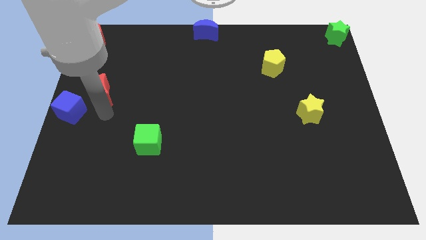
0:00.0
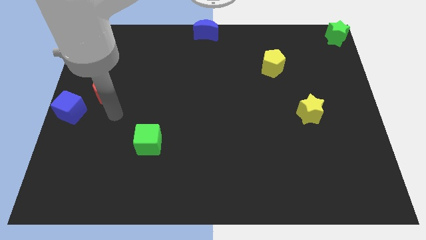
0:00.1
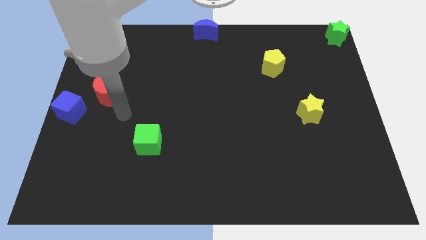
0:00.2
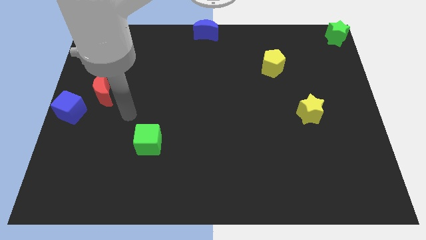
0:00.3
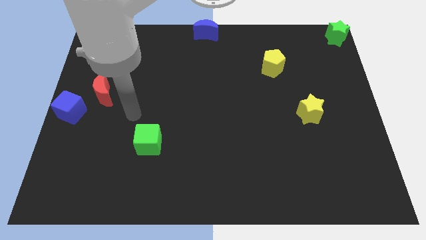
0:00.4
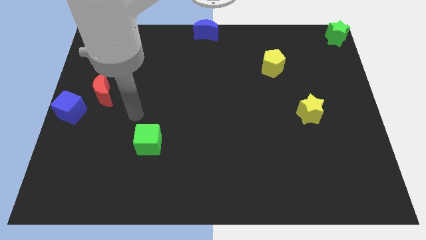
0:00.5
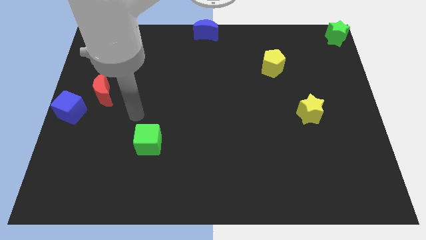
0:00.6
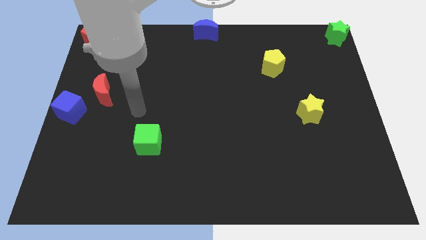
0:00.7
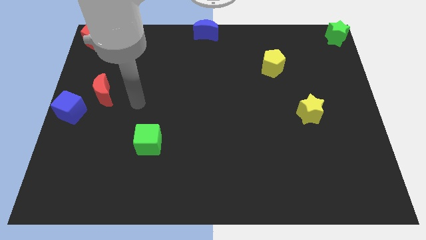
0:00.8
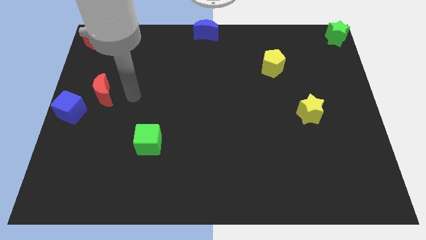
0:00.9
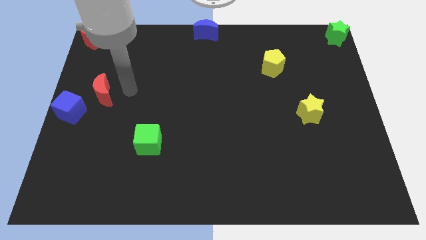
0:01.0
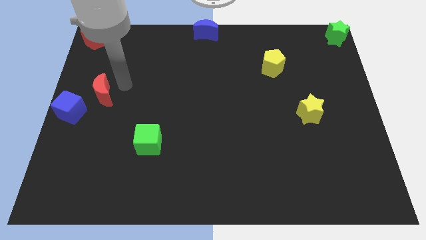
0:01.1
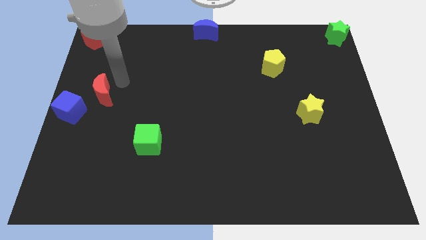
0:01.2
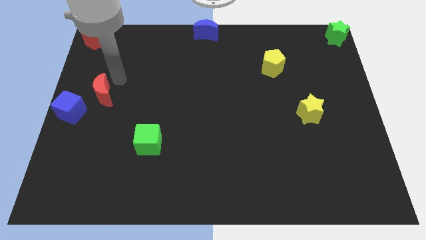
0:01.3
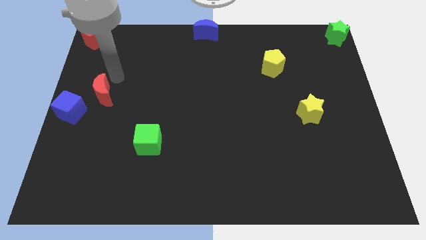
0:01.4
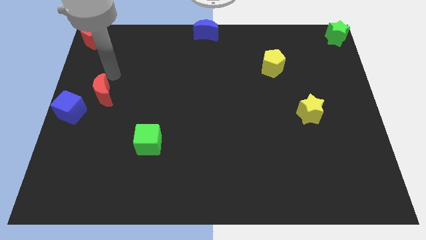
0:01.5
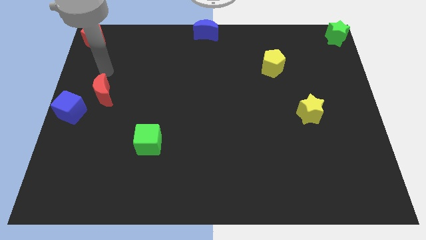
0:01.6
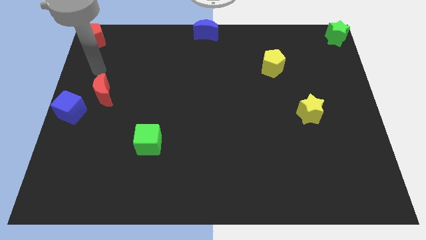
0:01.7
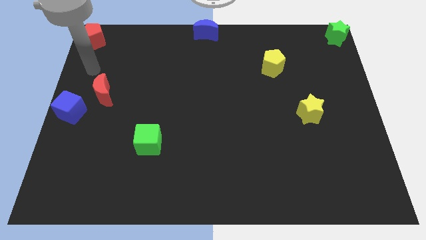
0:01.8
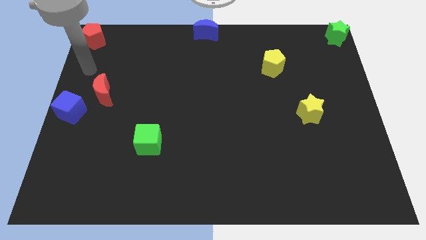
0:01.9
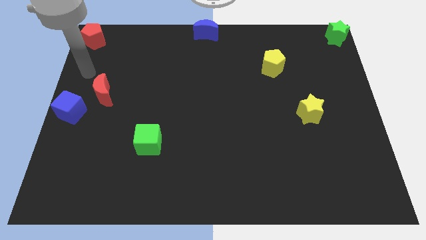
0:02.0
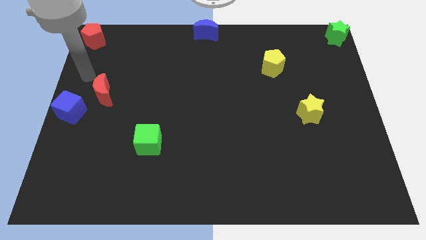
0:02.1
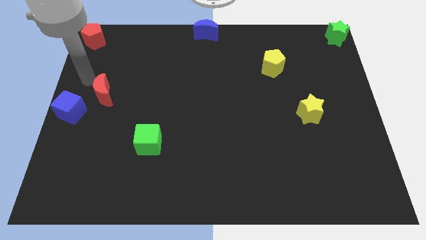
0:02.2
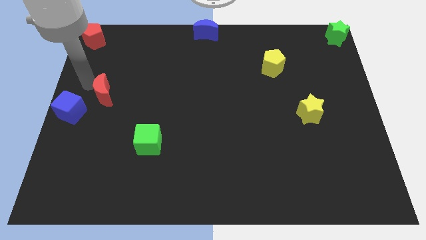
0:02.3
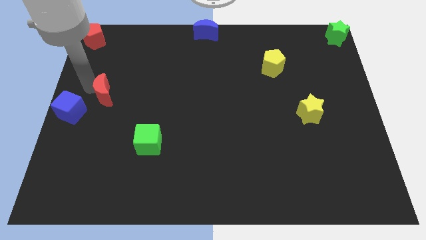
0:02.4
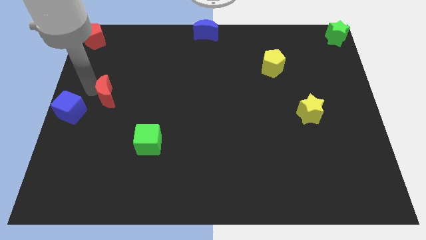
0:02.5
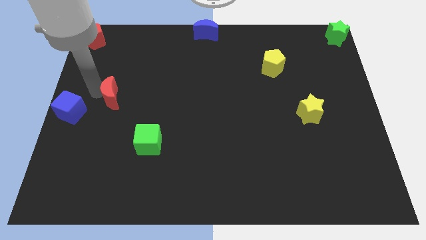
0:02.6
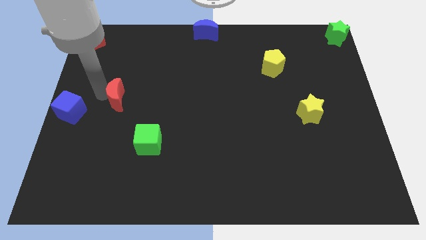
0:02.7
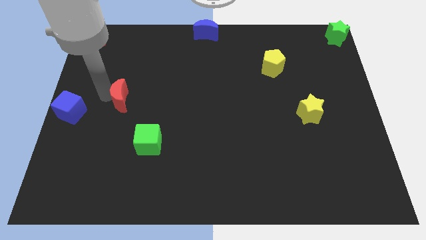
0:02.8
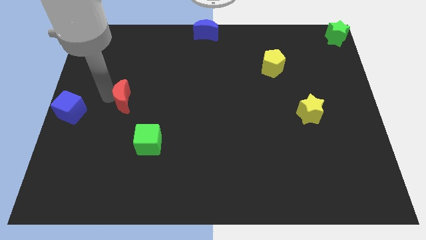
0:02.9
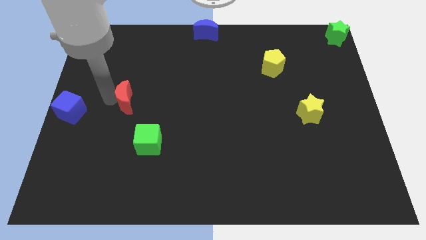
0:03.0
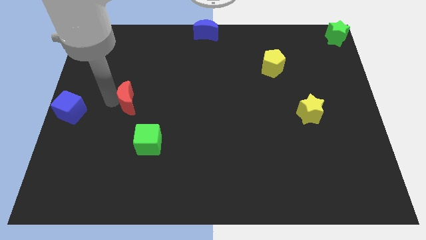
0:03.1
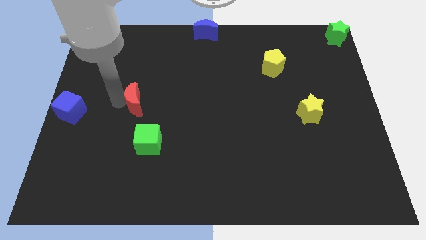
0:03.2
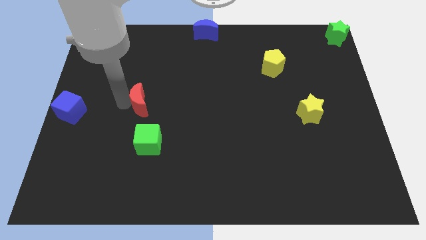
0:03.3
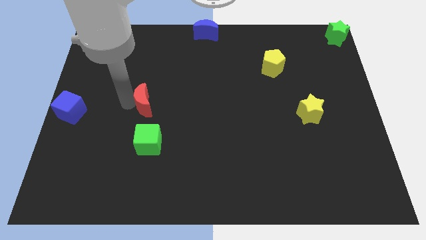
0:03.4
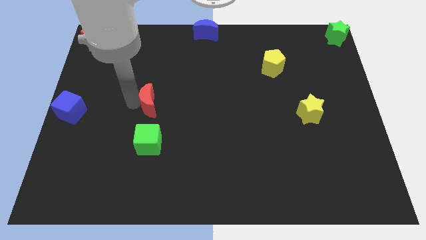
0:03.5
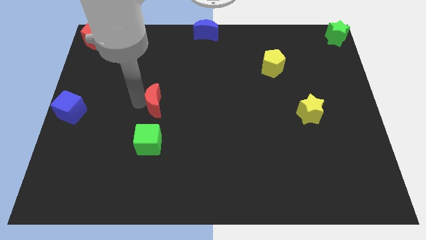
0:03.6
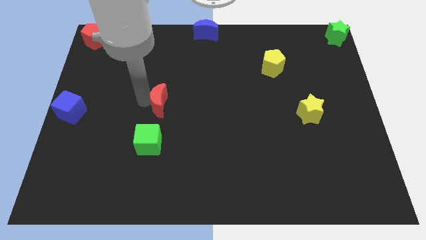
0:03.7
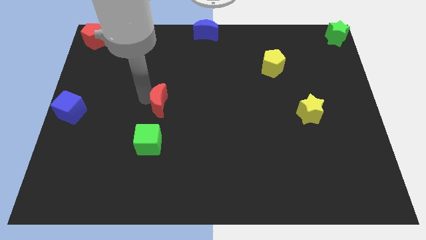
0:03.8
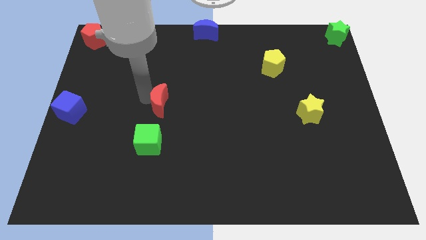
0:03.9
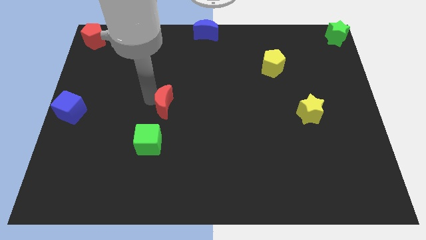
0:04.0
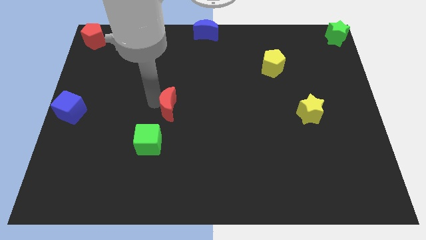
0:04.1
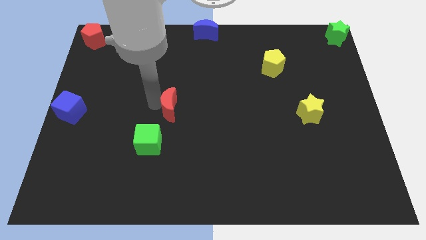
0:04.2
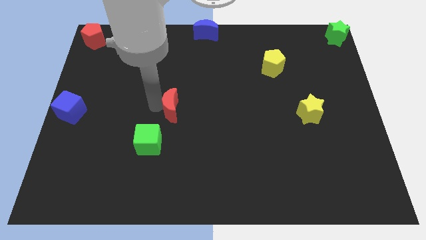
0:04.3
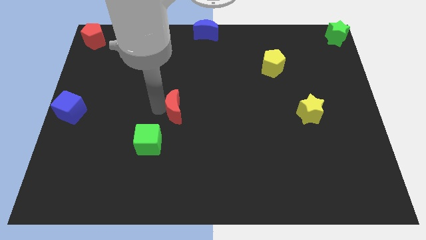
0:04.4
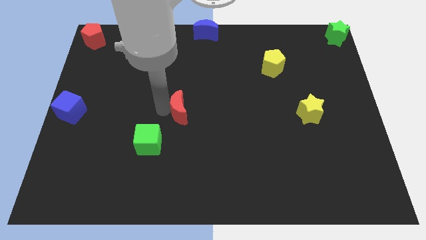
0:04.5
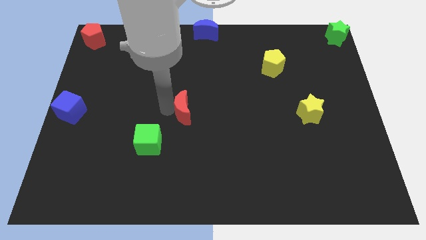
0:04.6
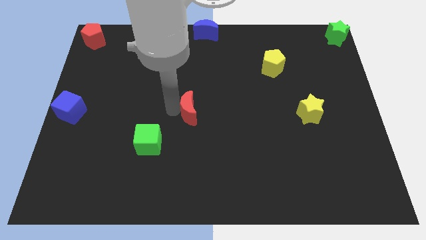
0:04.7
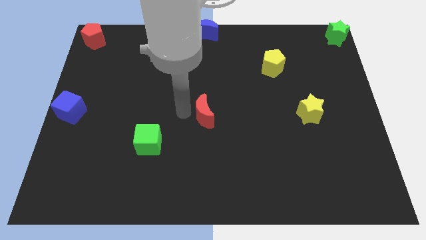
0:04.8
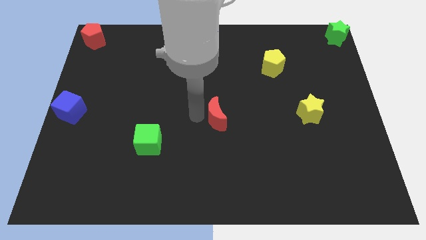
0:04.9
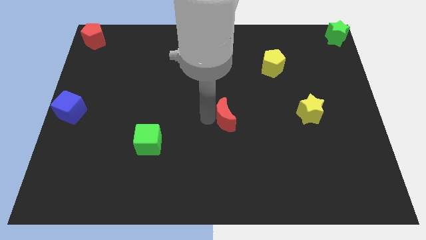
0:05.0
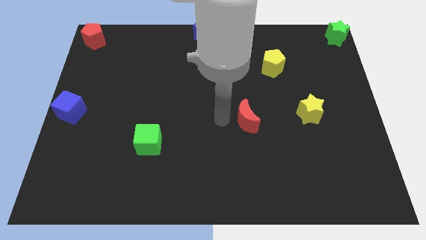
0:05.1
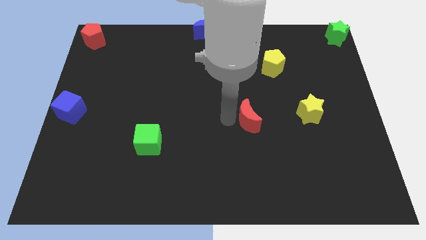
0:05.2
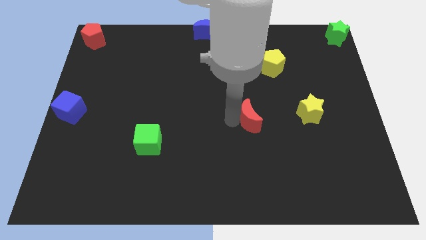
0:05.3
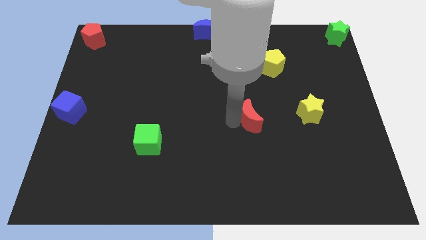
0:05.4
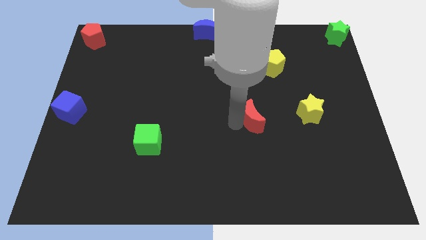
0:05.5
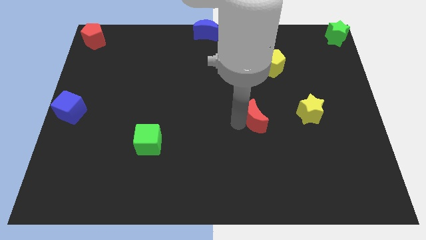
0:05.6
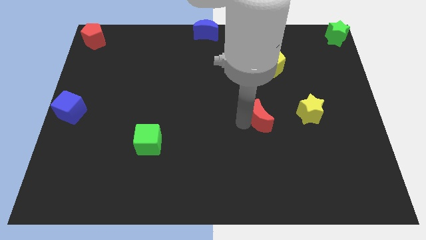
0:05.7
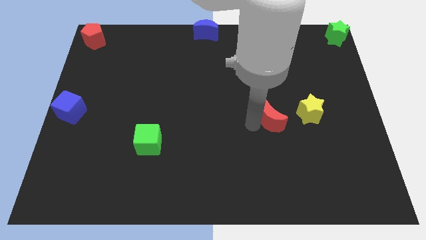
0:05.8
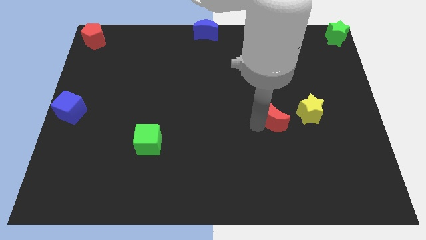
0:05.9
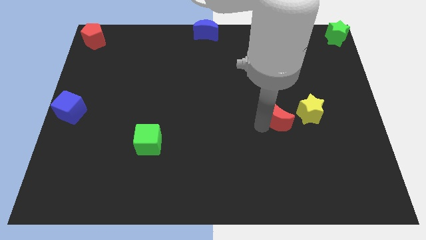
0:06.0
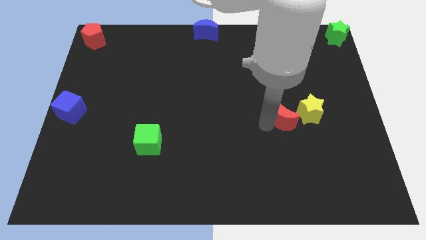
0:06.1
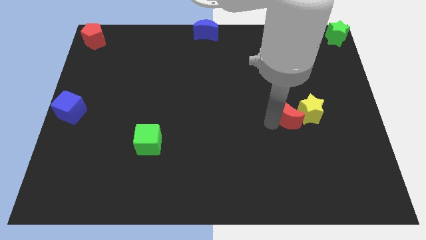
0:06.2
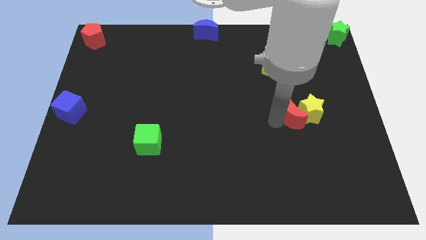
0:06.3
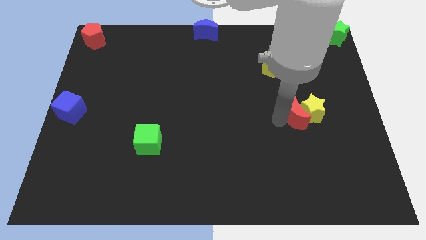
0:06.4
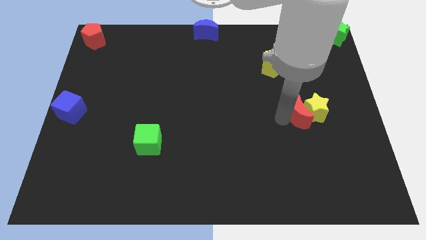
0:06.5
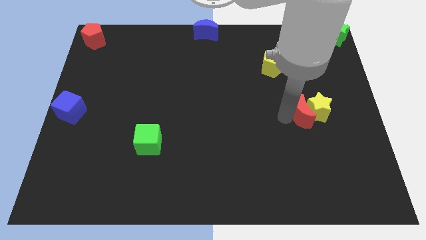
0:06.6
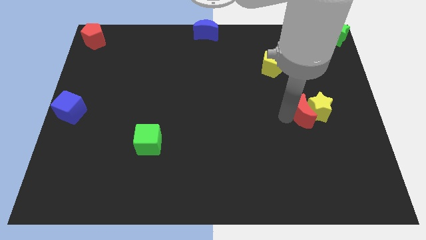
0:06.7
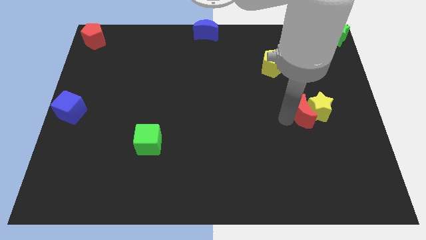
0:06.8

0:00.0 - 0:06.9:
move the red moon near to the yellow star

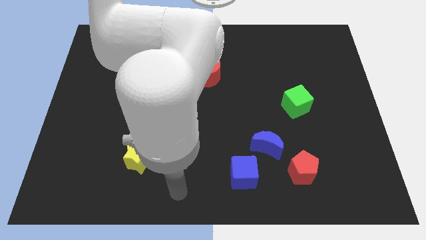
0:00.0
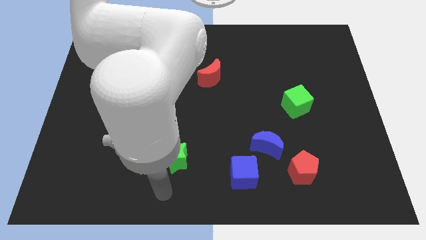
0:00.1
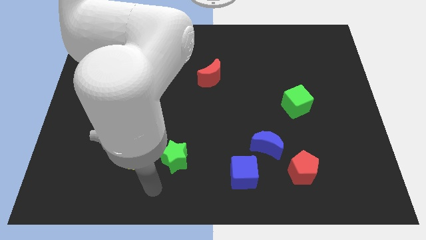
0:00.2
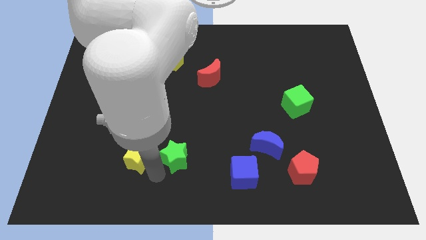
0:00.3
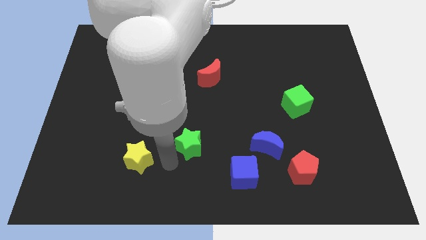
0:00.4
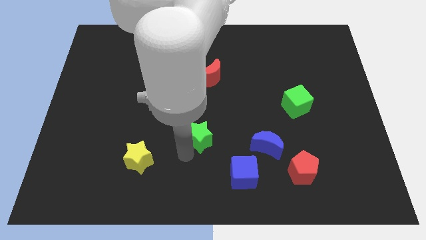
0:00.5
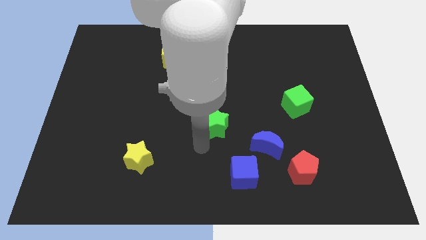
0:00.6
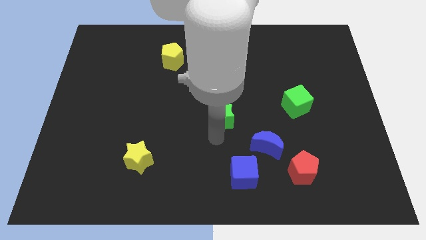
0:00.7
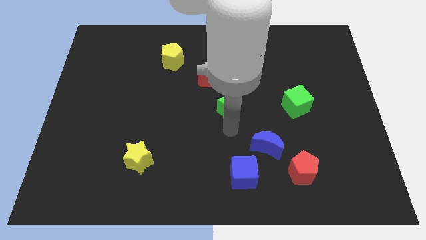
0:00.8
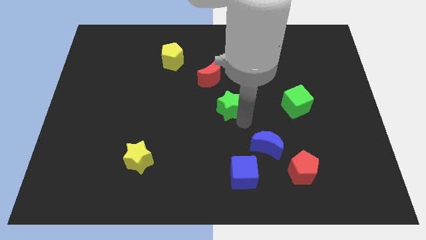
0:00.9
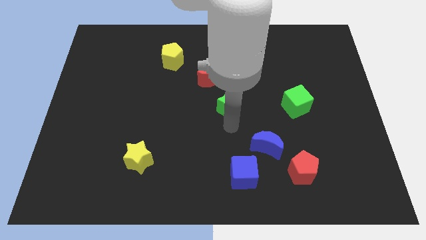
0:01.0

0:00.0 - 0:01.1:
separate green star from yellow star

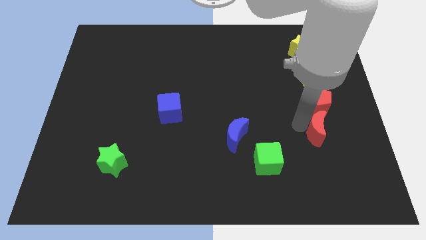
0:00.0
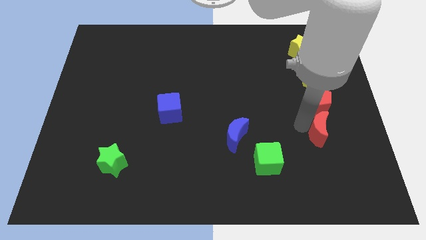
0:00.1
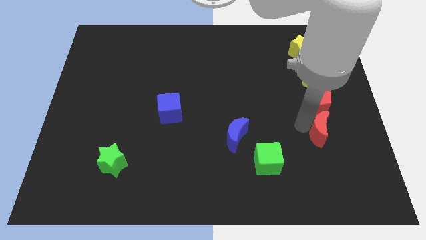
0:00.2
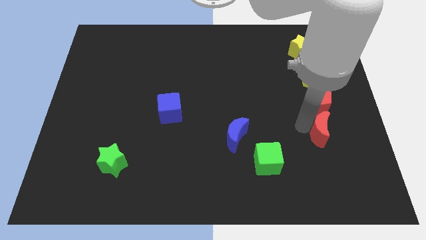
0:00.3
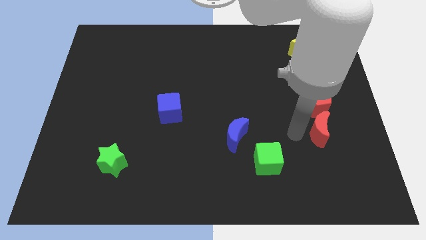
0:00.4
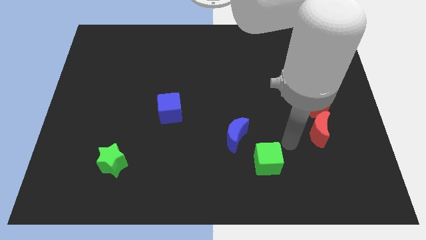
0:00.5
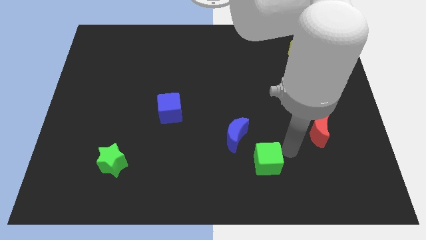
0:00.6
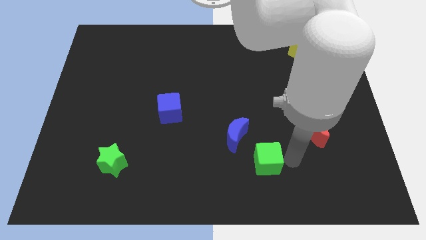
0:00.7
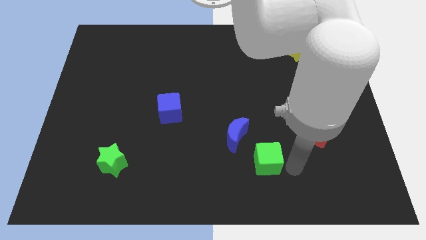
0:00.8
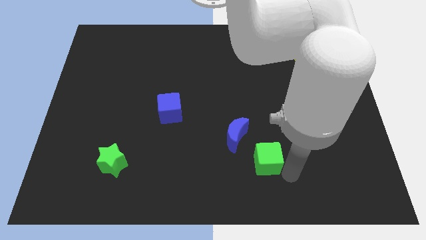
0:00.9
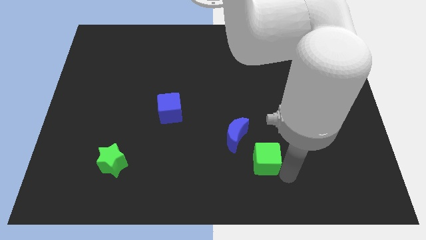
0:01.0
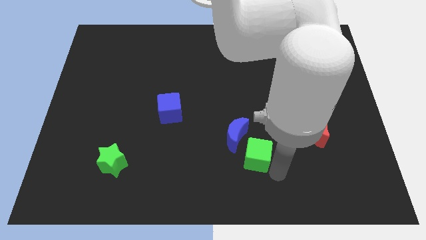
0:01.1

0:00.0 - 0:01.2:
touch the bottom of green cube
